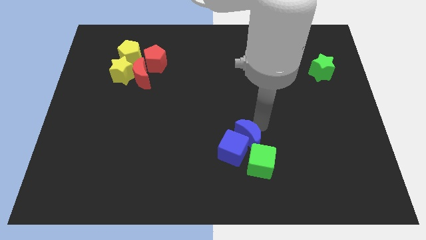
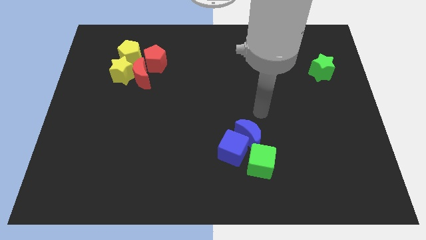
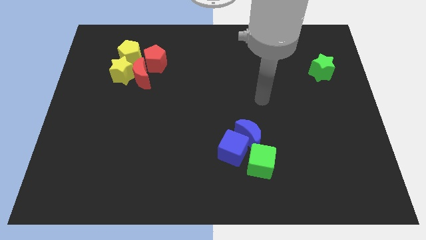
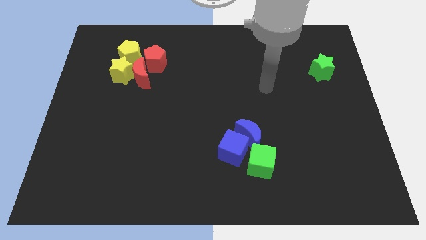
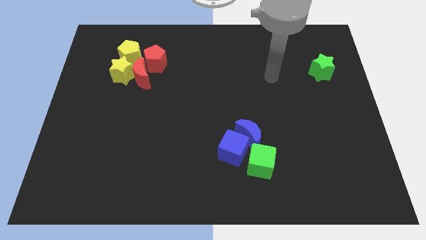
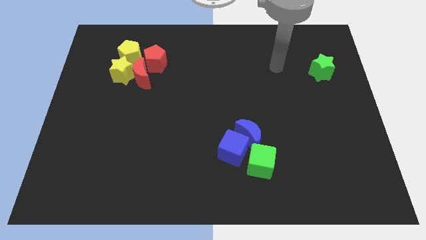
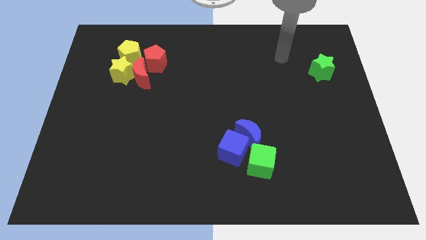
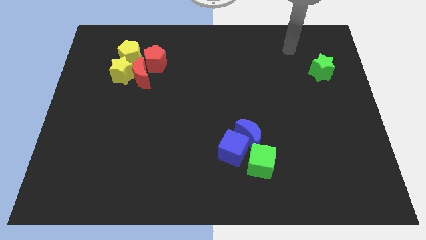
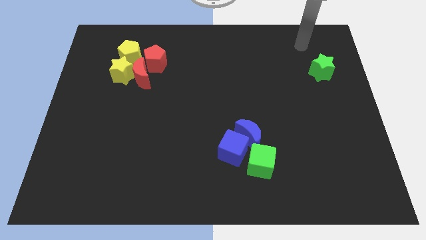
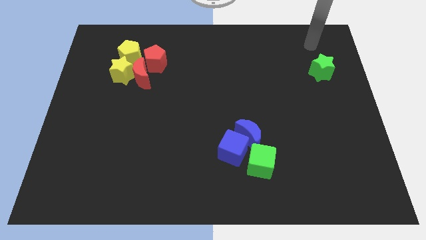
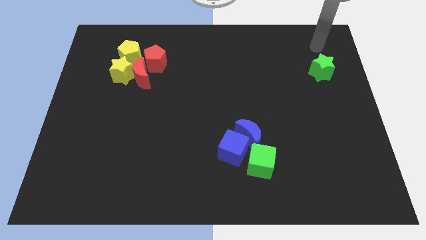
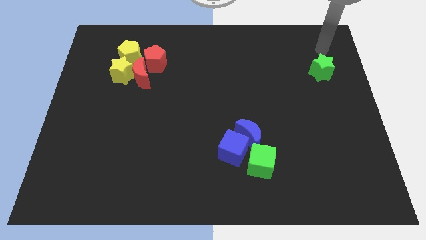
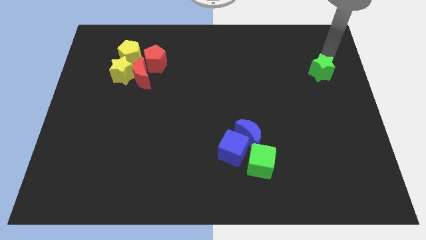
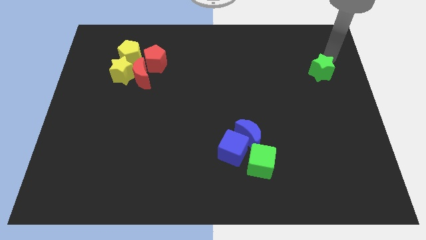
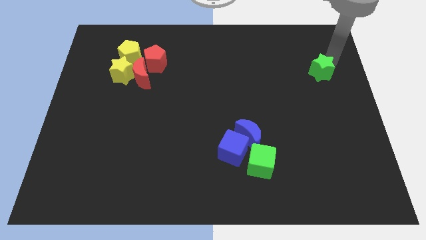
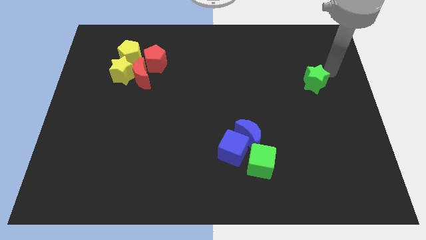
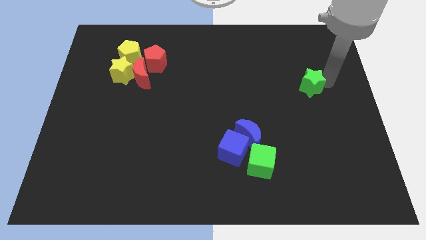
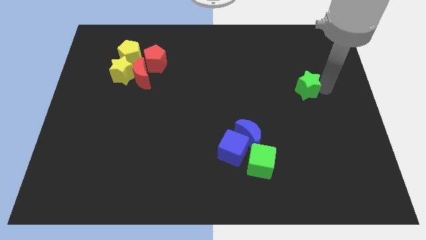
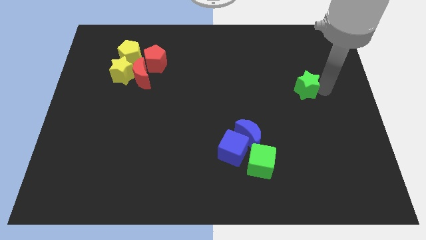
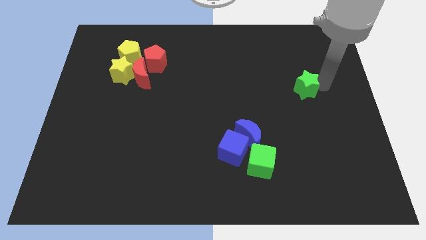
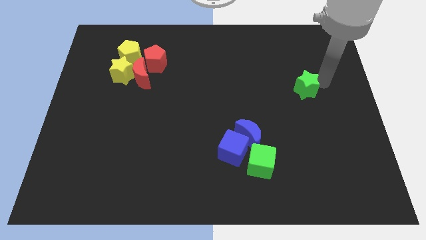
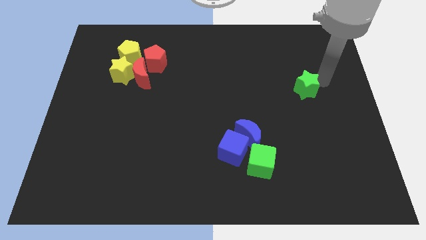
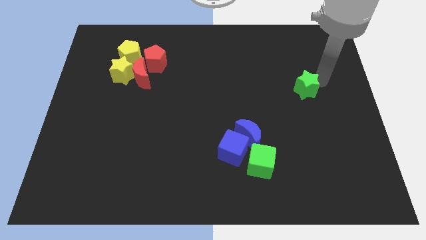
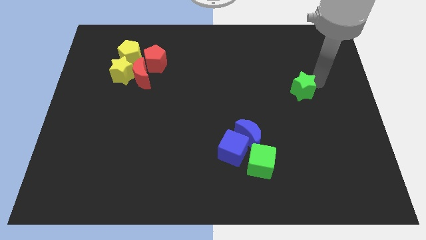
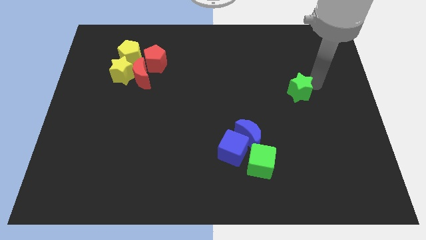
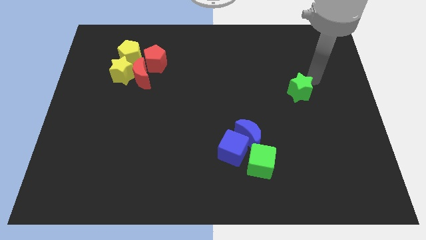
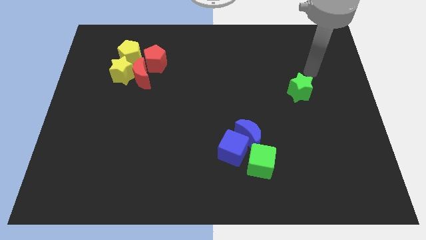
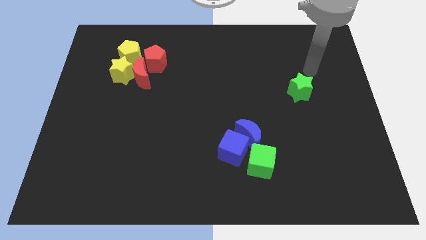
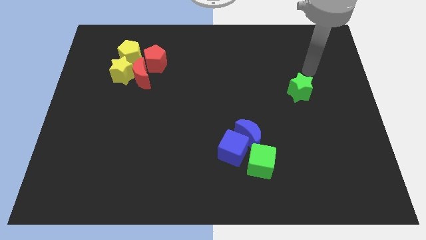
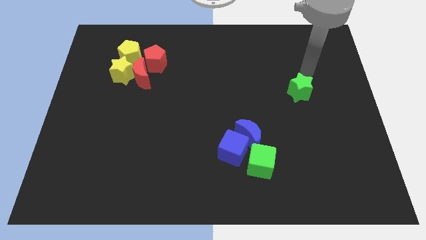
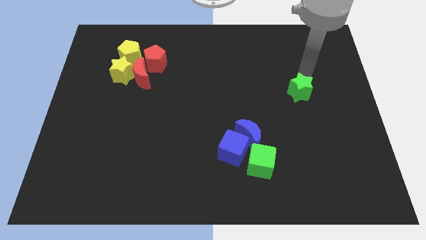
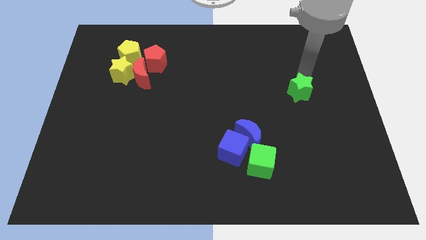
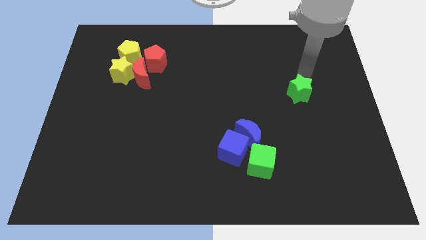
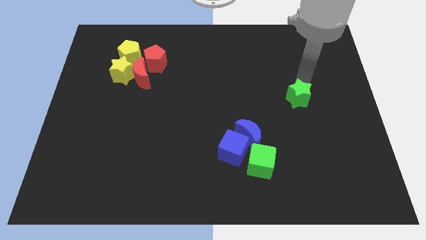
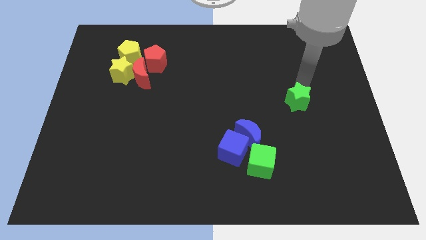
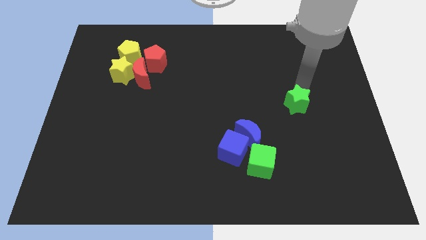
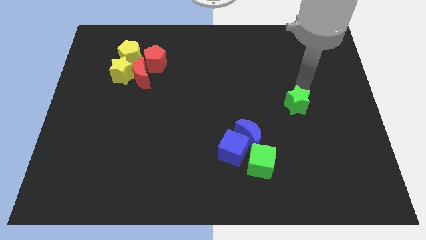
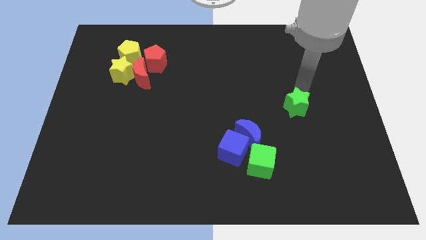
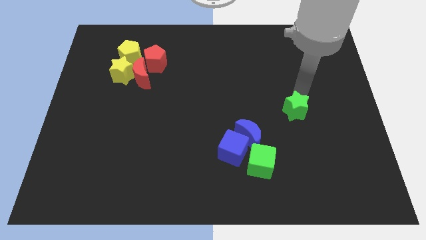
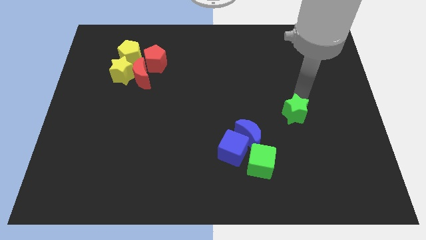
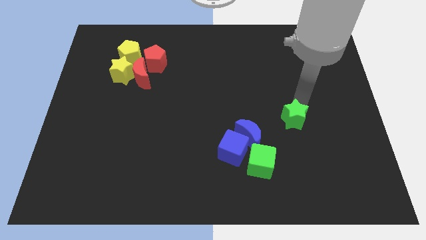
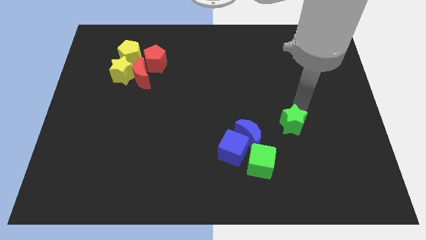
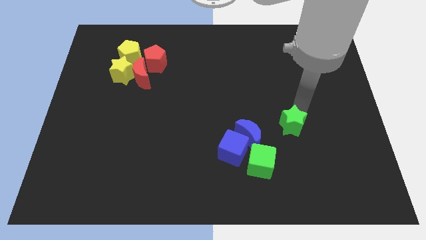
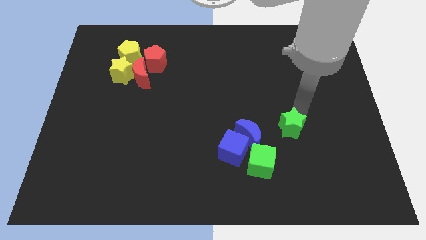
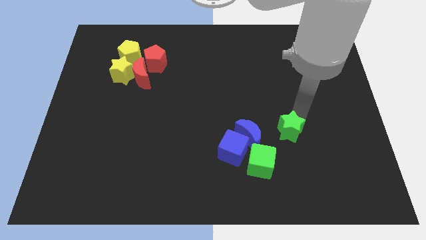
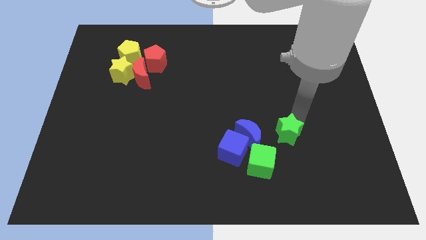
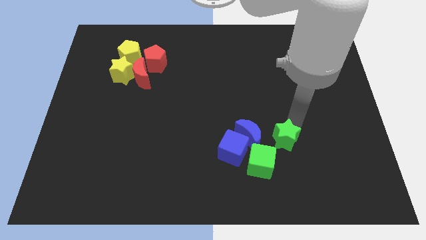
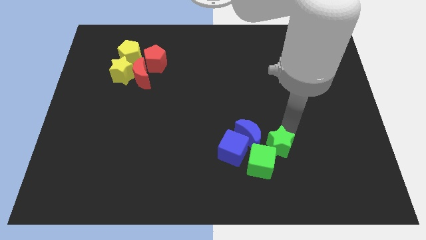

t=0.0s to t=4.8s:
push the green star to the top of the green cube

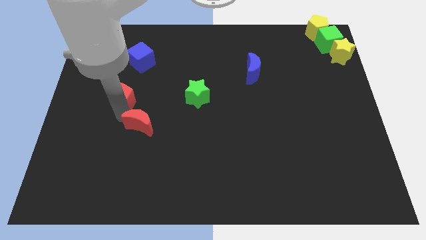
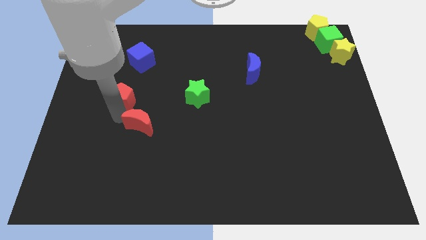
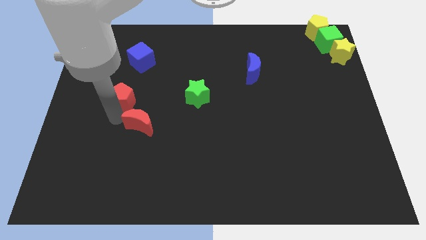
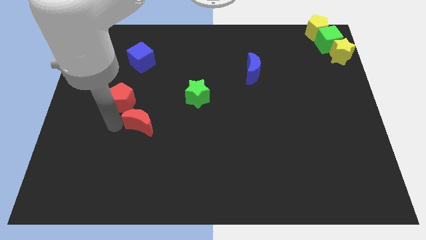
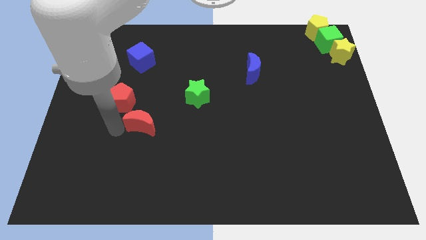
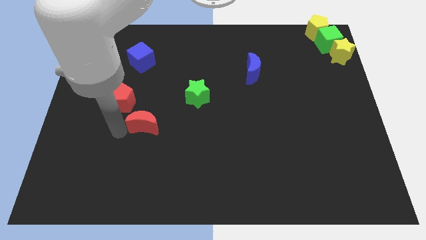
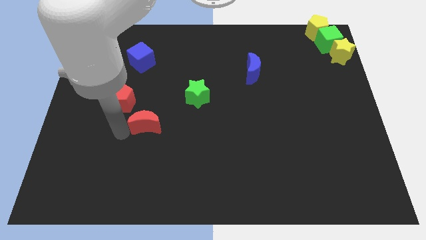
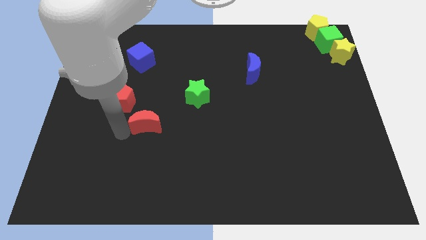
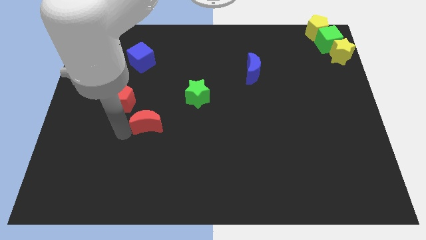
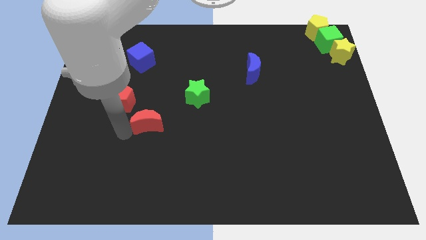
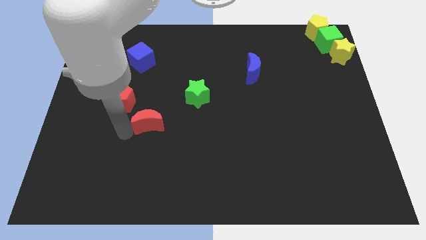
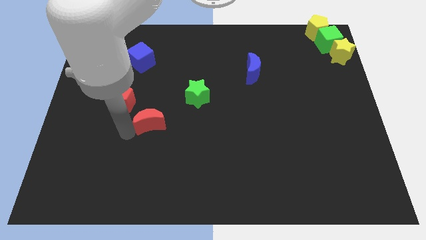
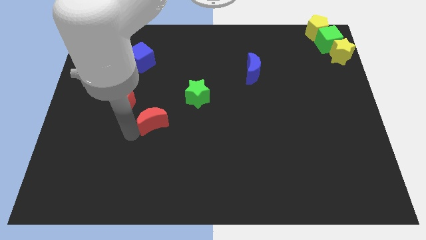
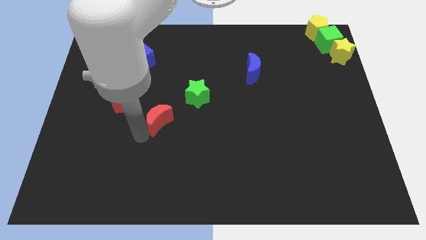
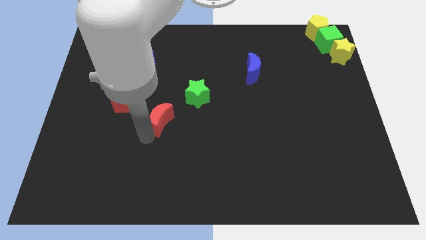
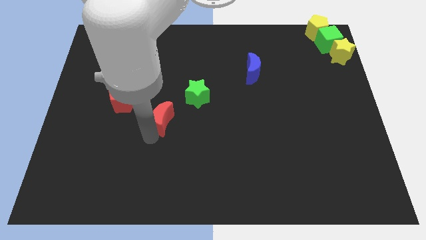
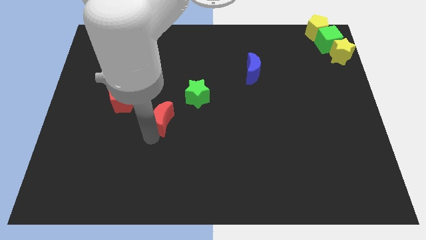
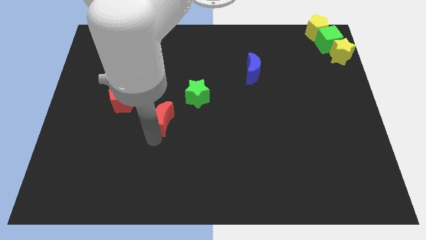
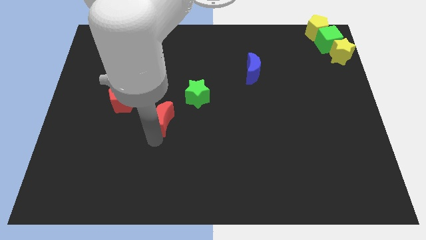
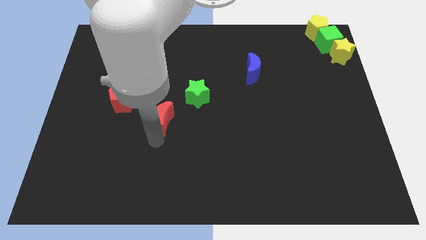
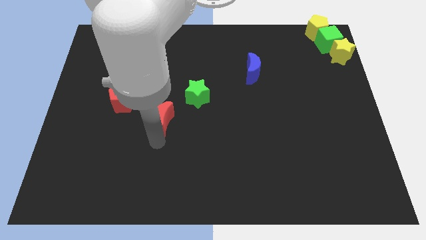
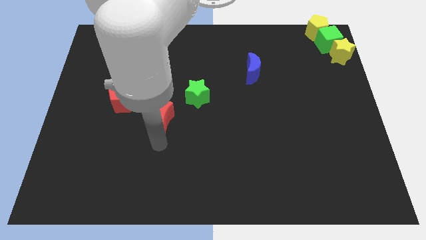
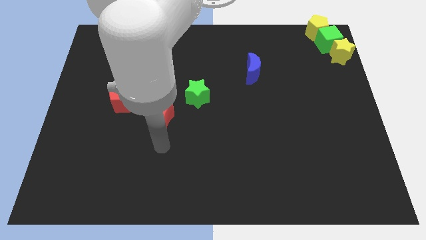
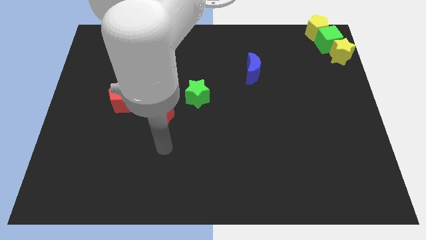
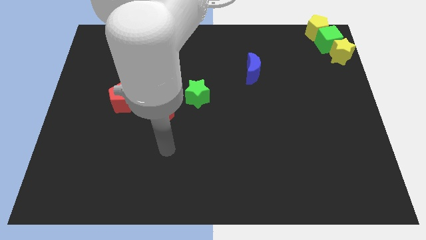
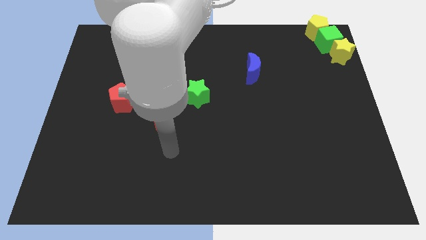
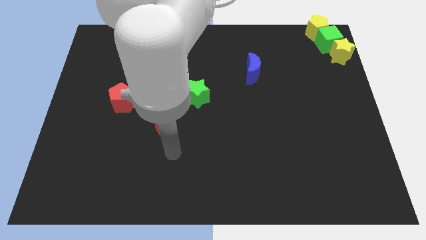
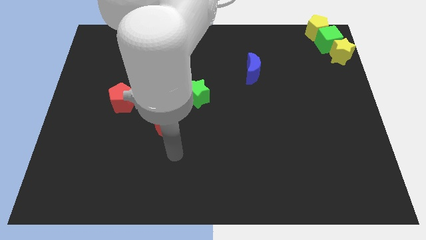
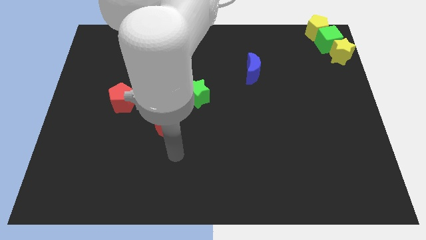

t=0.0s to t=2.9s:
move the red crescent slightly opposite to the green star

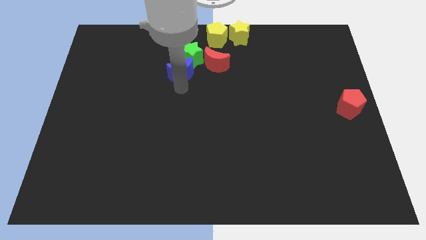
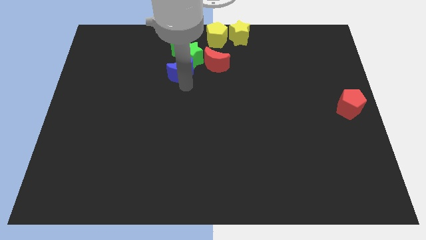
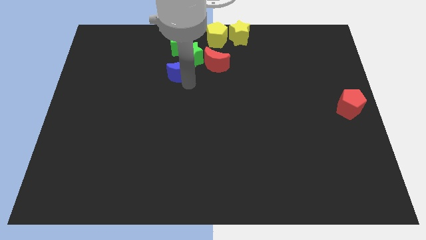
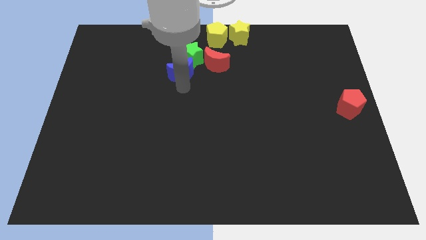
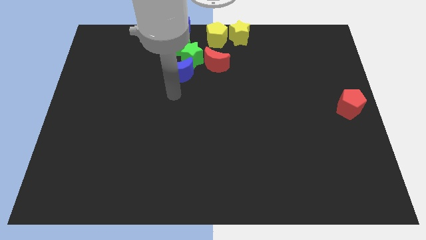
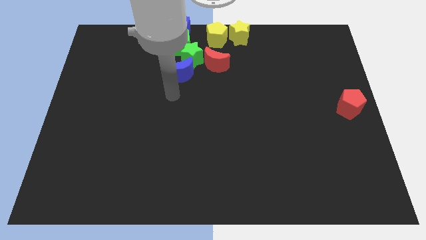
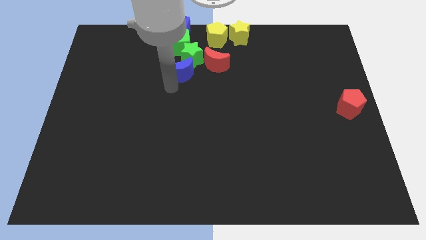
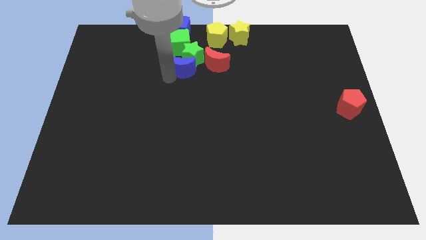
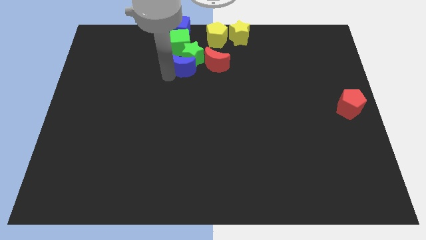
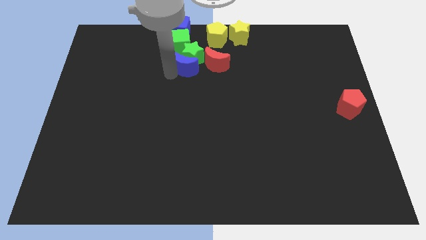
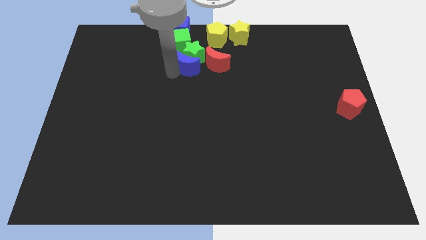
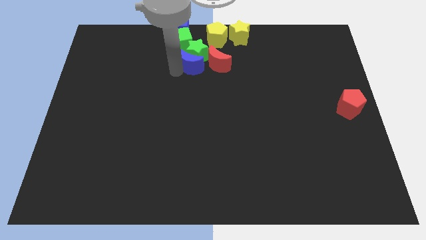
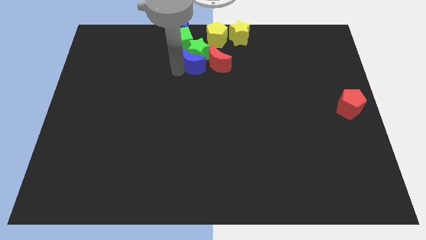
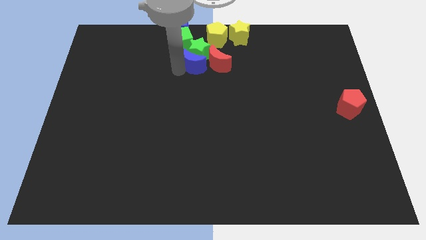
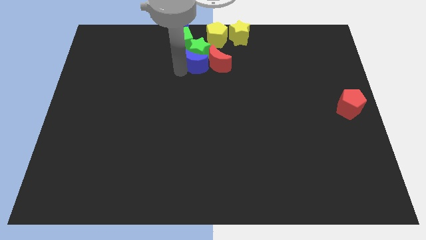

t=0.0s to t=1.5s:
push the blue moon into the group of blocks
